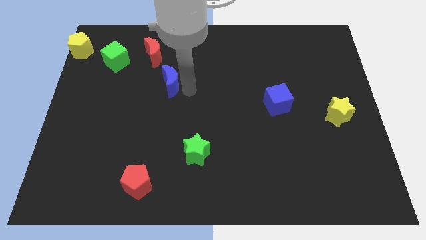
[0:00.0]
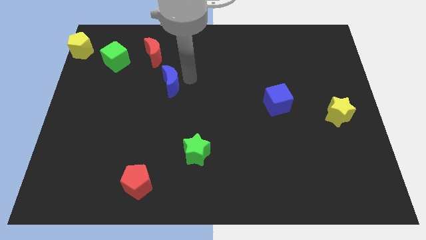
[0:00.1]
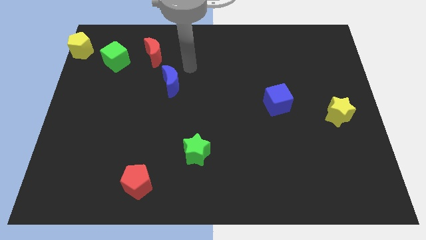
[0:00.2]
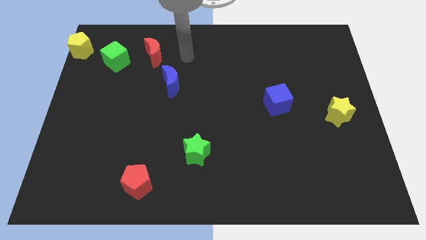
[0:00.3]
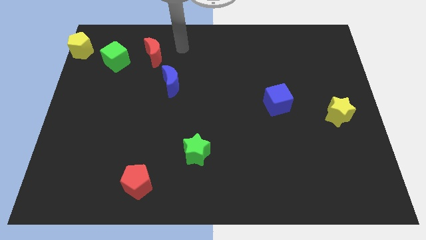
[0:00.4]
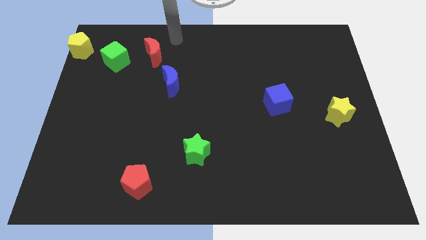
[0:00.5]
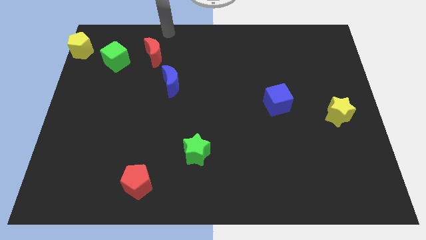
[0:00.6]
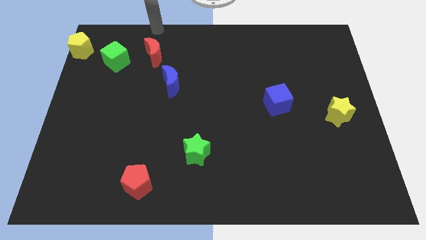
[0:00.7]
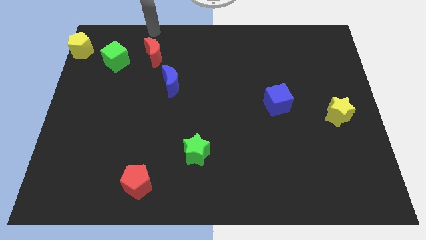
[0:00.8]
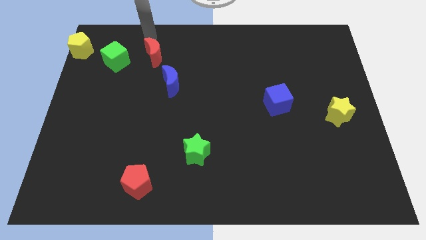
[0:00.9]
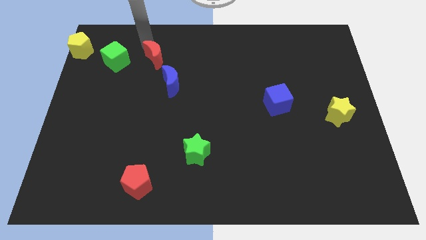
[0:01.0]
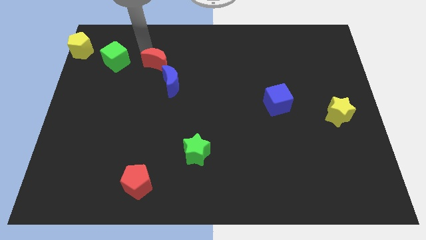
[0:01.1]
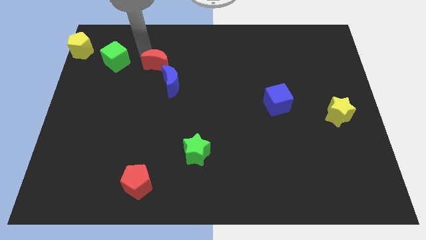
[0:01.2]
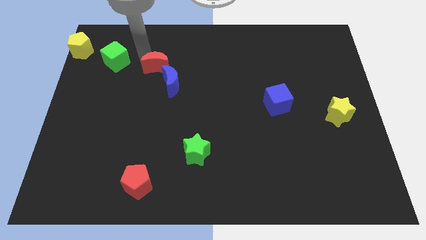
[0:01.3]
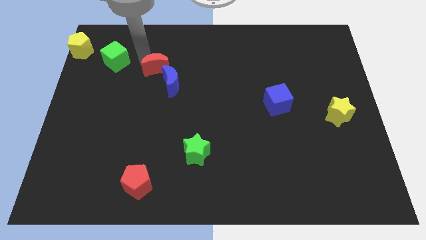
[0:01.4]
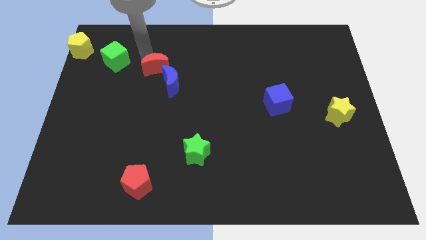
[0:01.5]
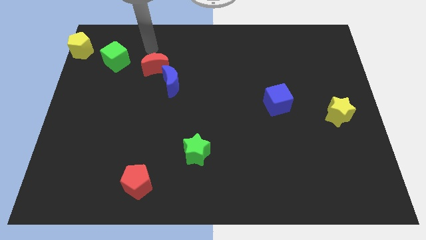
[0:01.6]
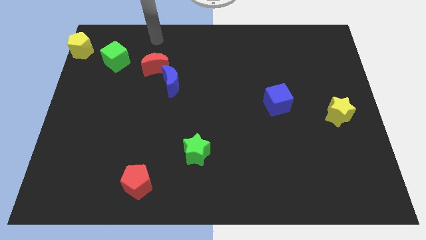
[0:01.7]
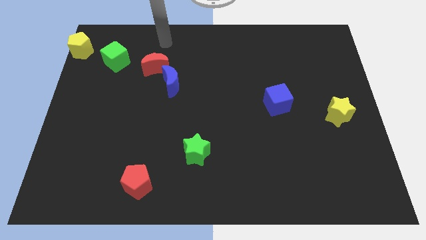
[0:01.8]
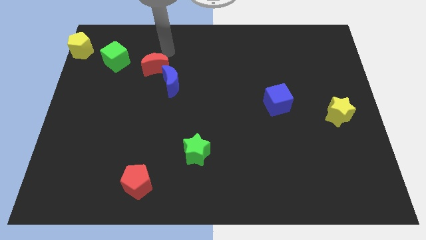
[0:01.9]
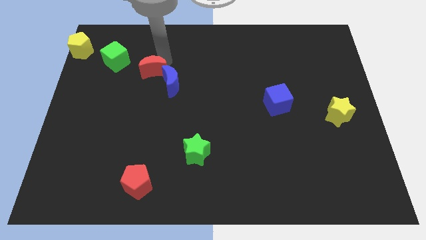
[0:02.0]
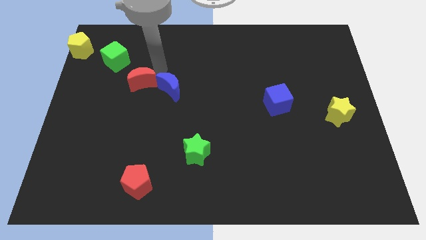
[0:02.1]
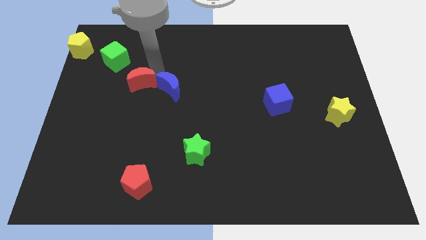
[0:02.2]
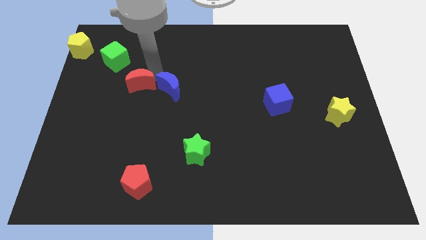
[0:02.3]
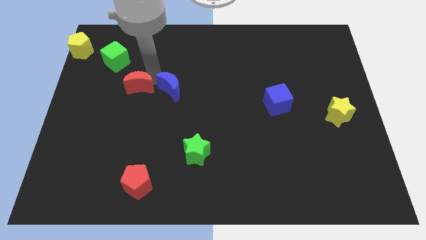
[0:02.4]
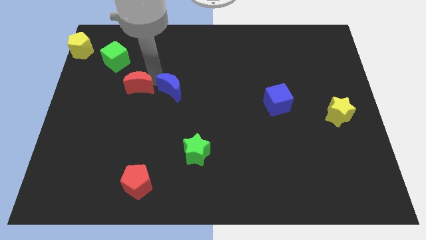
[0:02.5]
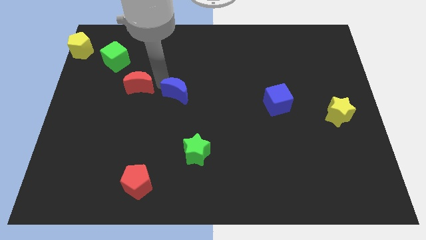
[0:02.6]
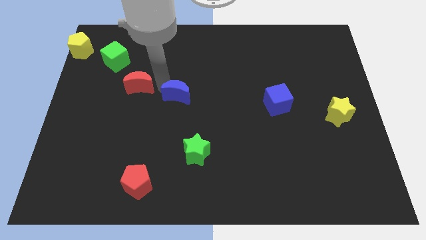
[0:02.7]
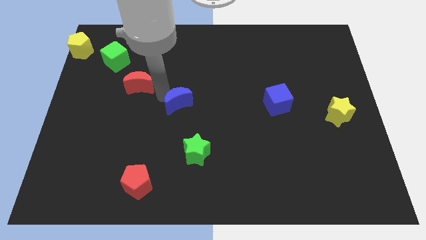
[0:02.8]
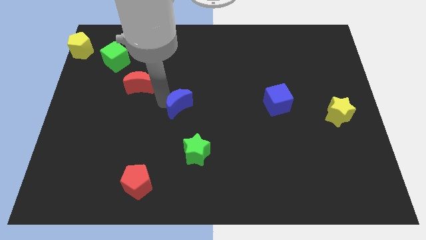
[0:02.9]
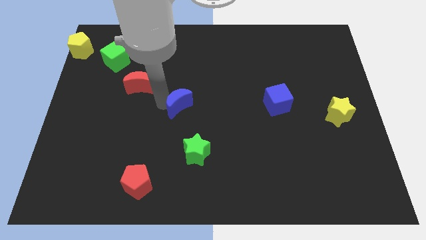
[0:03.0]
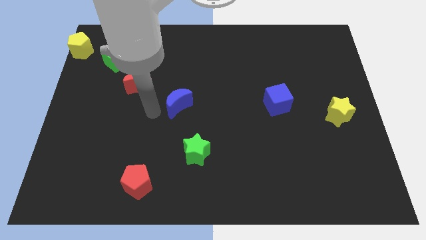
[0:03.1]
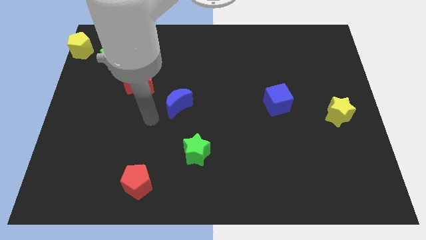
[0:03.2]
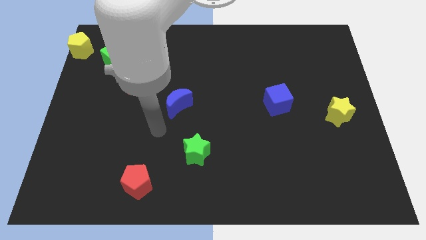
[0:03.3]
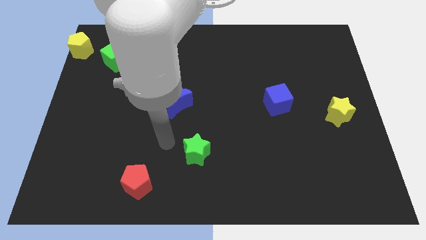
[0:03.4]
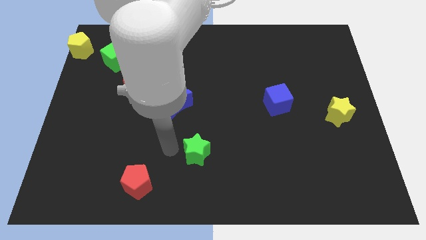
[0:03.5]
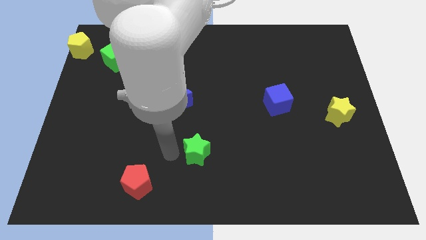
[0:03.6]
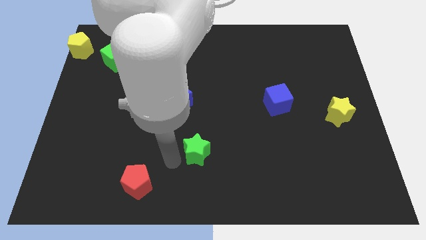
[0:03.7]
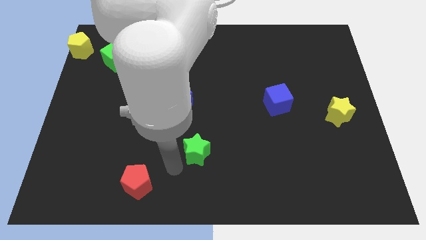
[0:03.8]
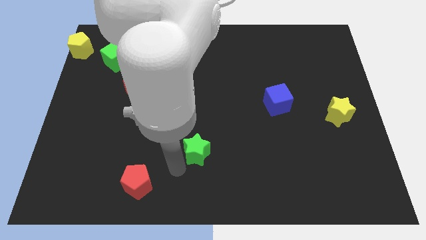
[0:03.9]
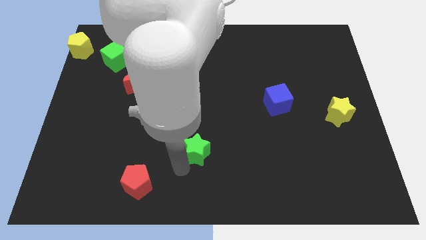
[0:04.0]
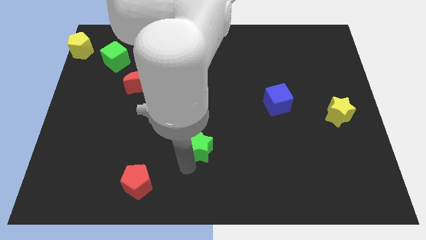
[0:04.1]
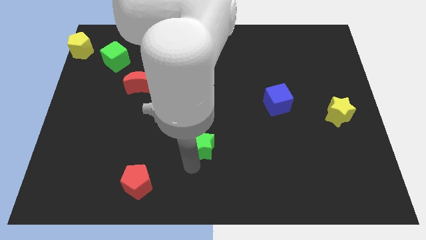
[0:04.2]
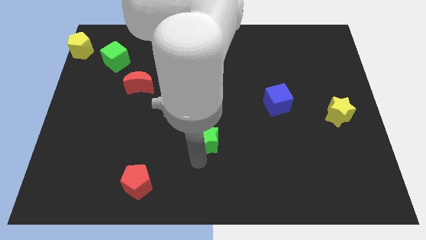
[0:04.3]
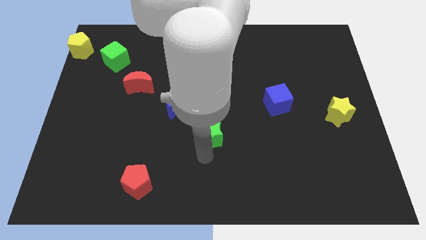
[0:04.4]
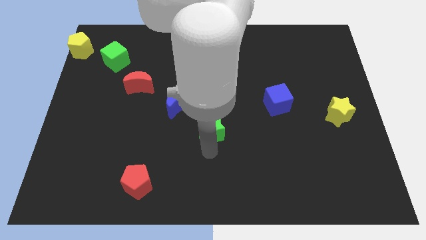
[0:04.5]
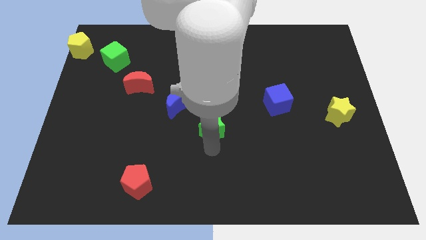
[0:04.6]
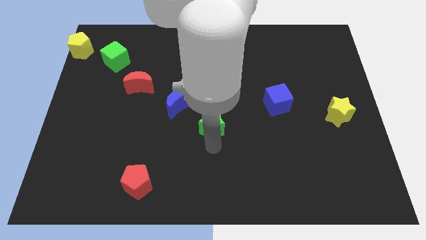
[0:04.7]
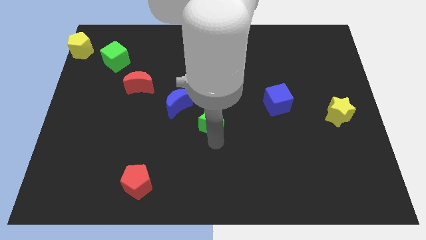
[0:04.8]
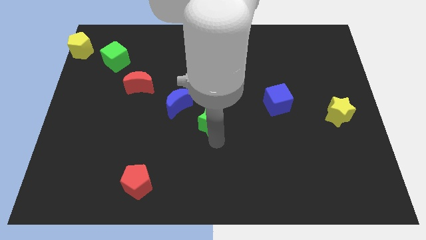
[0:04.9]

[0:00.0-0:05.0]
arrange a group of blocks in a diagonal line

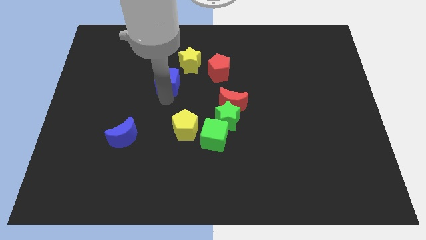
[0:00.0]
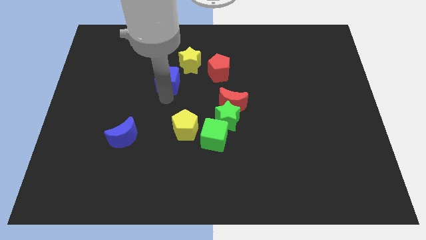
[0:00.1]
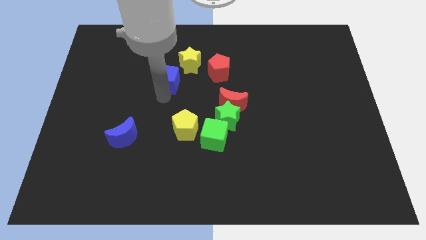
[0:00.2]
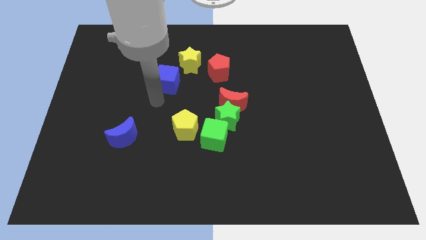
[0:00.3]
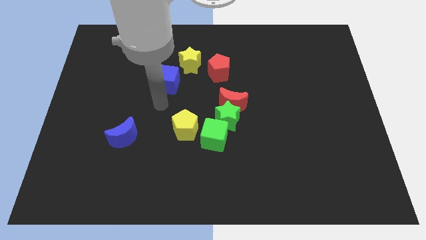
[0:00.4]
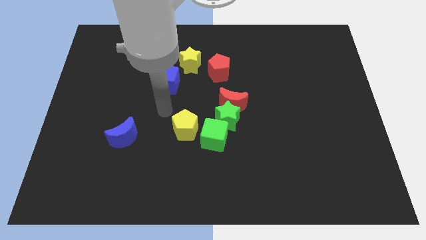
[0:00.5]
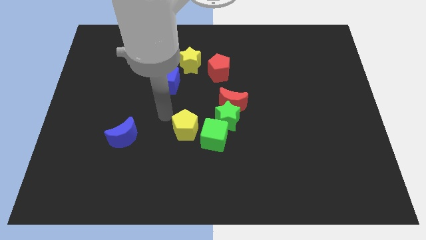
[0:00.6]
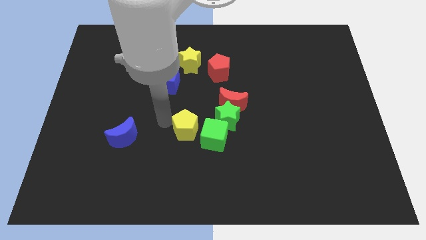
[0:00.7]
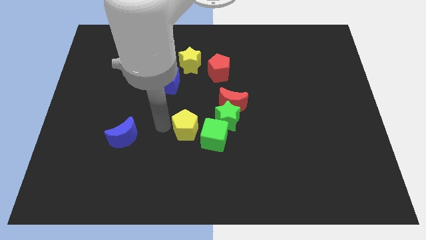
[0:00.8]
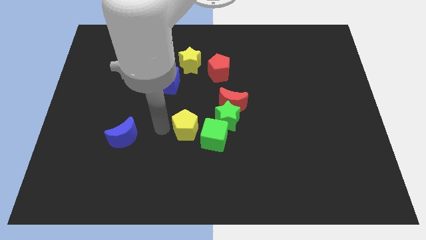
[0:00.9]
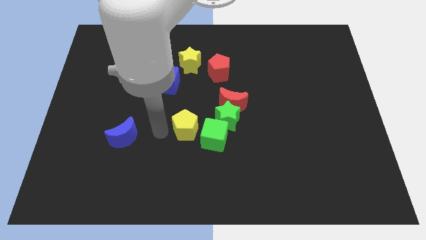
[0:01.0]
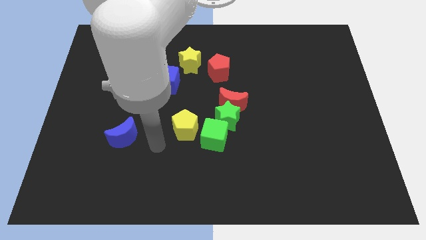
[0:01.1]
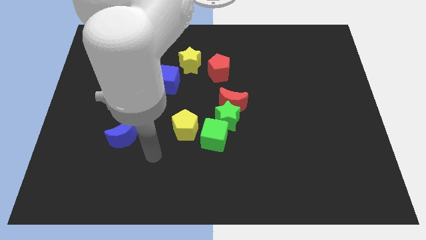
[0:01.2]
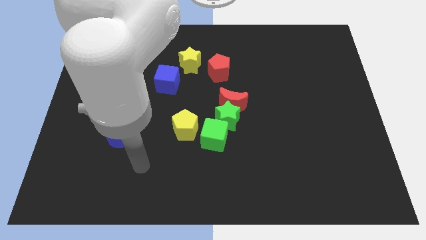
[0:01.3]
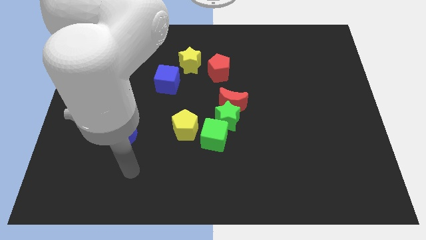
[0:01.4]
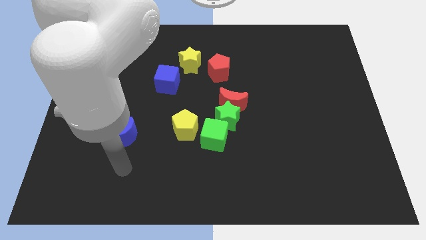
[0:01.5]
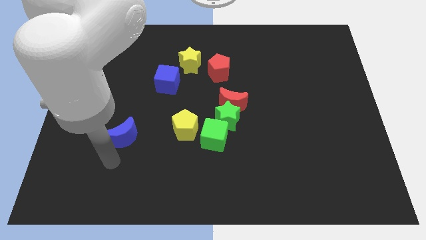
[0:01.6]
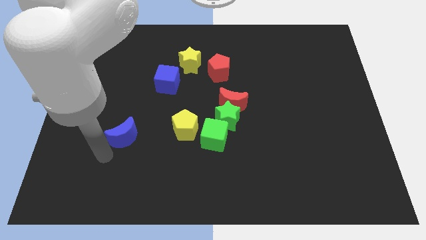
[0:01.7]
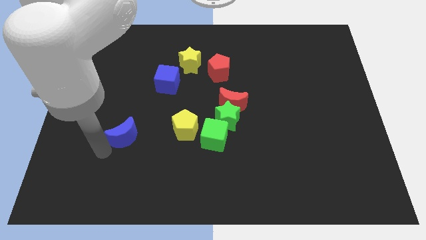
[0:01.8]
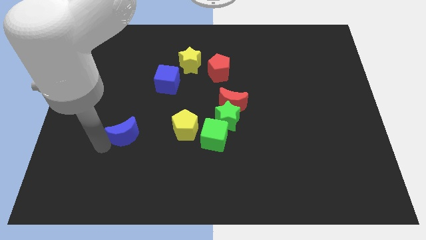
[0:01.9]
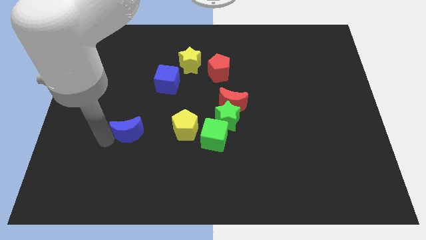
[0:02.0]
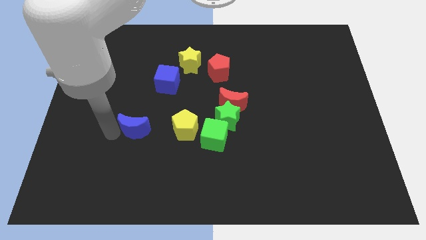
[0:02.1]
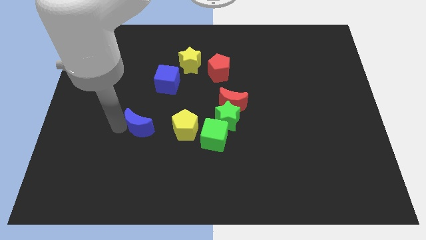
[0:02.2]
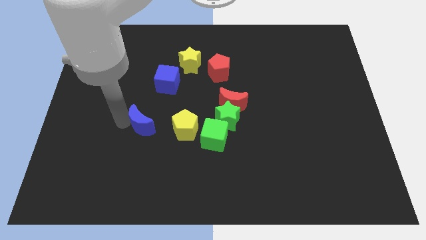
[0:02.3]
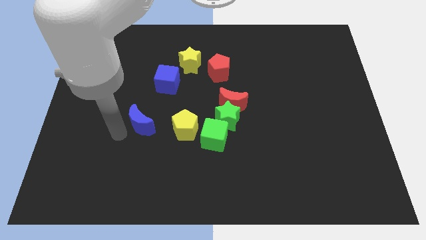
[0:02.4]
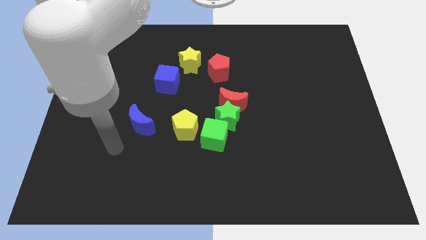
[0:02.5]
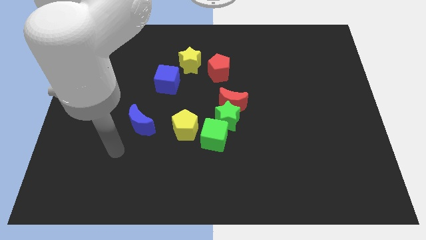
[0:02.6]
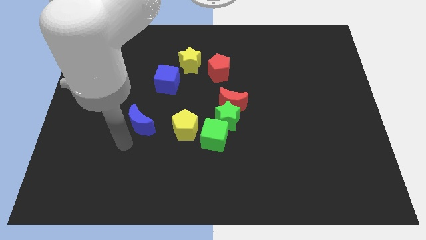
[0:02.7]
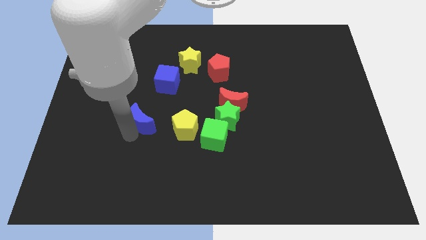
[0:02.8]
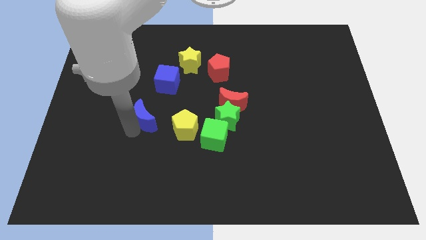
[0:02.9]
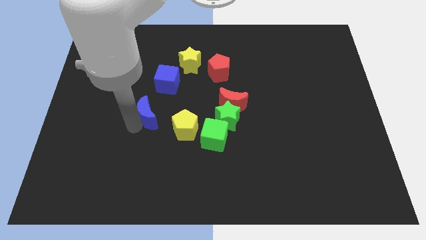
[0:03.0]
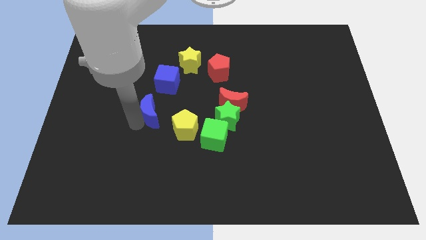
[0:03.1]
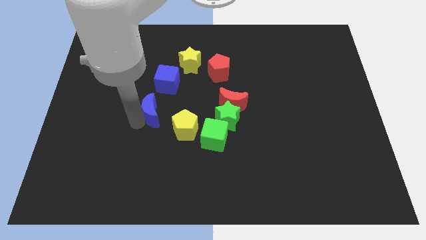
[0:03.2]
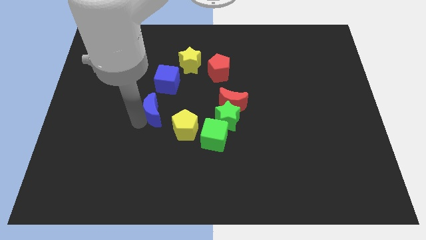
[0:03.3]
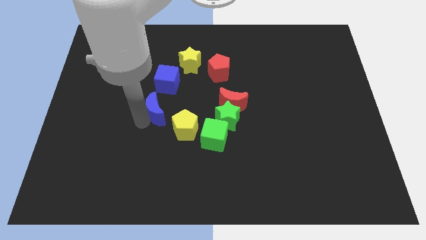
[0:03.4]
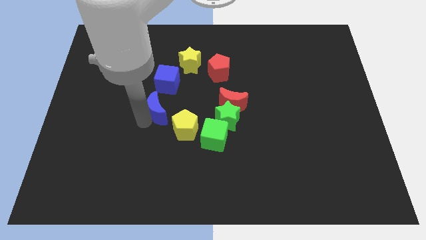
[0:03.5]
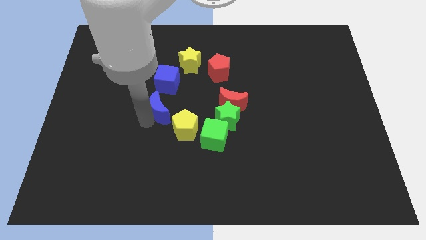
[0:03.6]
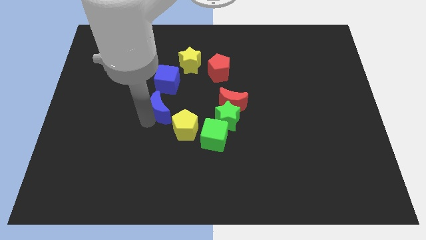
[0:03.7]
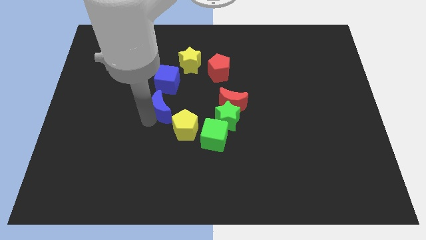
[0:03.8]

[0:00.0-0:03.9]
move your arm away from the blue cube
